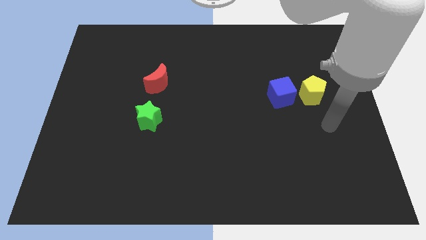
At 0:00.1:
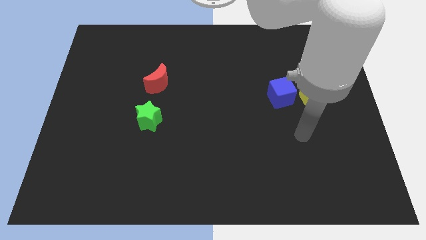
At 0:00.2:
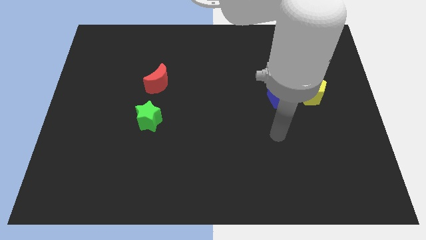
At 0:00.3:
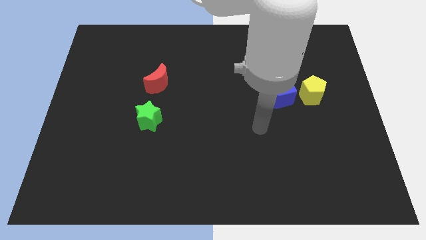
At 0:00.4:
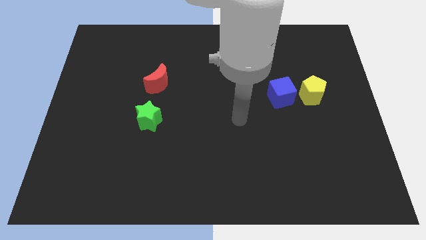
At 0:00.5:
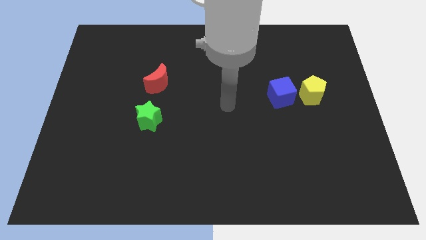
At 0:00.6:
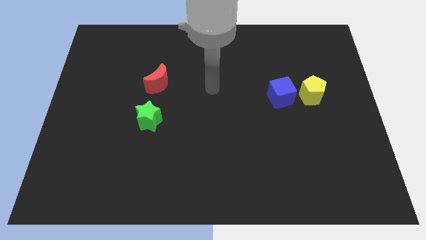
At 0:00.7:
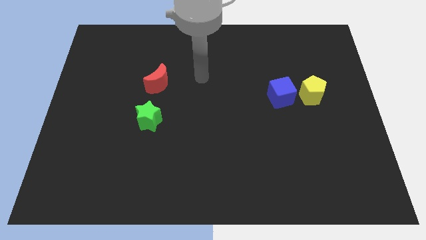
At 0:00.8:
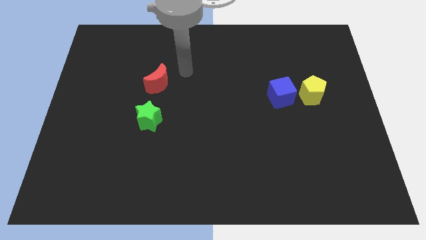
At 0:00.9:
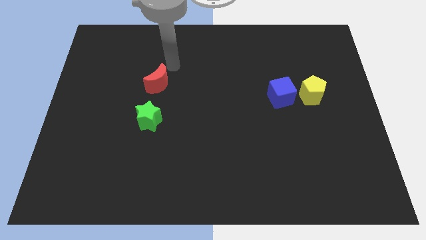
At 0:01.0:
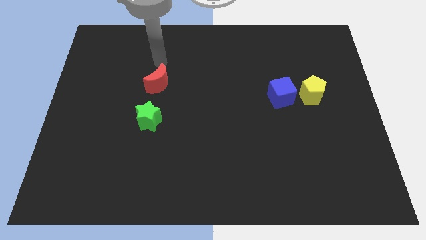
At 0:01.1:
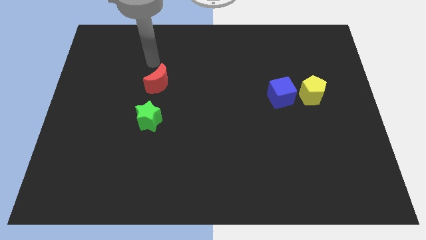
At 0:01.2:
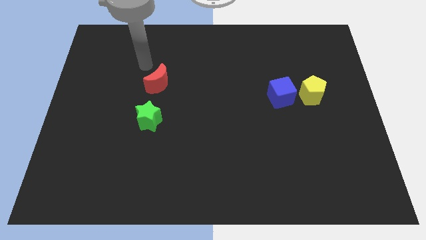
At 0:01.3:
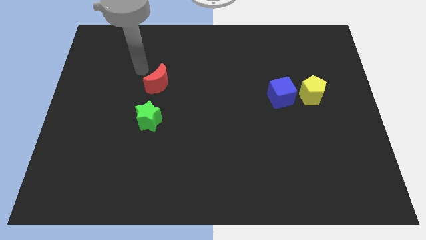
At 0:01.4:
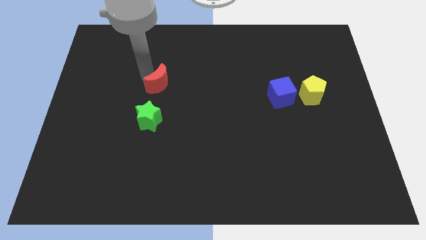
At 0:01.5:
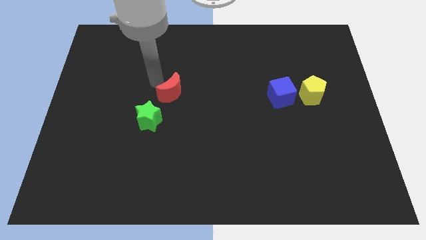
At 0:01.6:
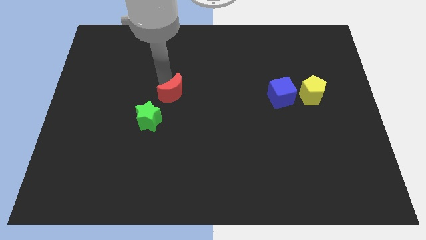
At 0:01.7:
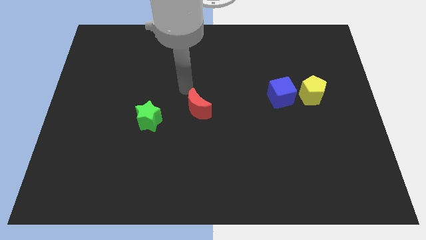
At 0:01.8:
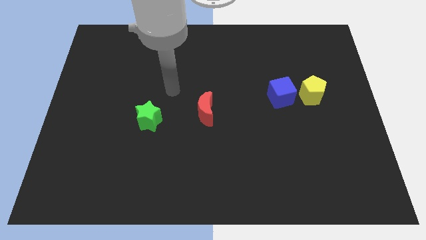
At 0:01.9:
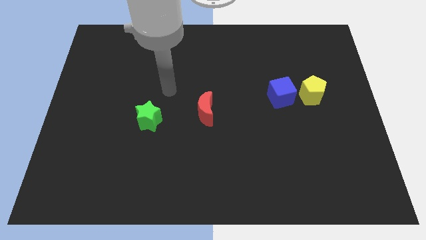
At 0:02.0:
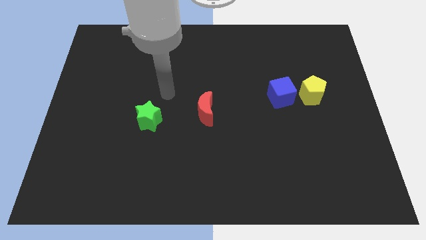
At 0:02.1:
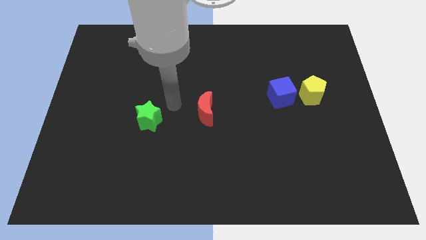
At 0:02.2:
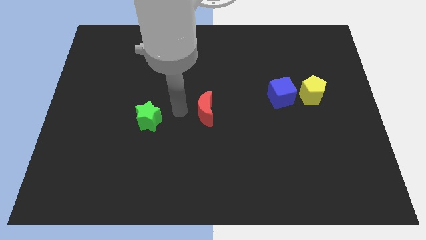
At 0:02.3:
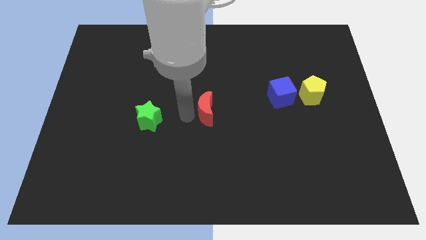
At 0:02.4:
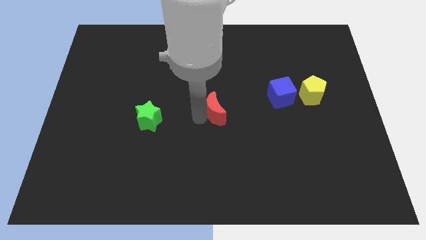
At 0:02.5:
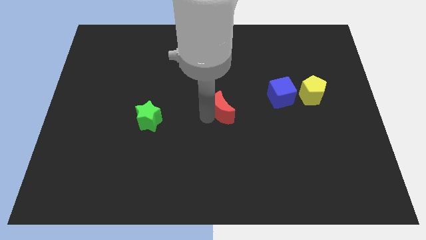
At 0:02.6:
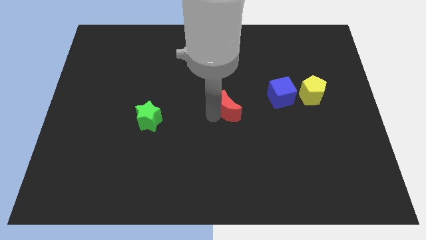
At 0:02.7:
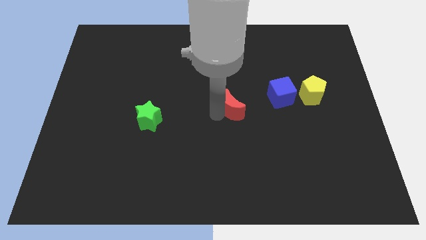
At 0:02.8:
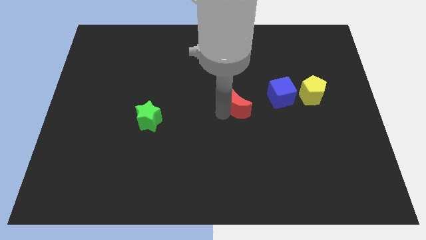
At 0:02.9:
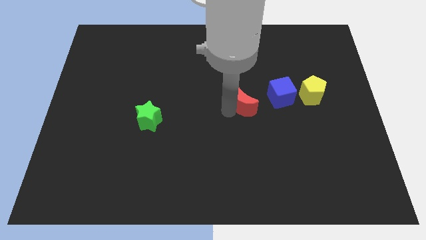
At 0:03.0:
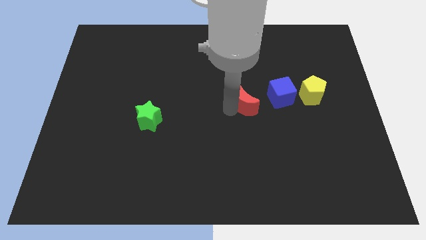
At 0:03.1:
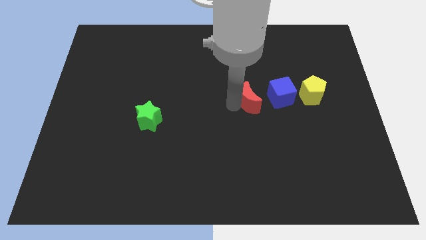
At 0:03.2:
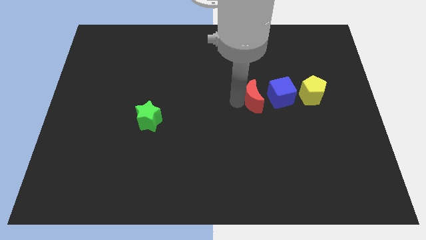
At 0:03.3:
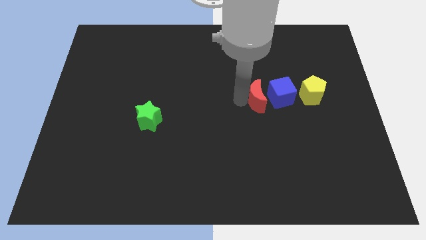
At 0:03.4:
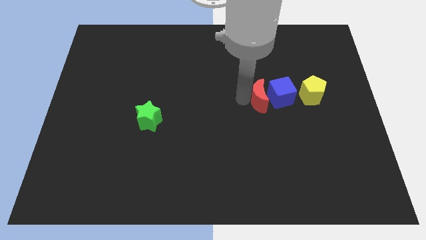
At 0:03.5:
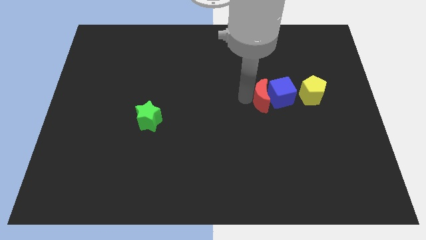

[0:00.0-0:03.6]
put the red block close to the blue cube

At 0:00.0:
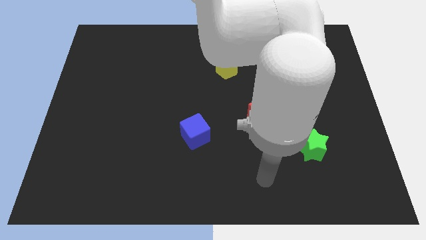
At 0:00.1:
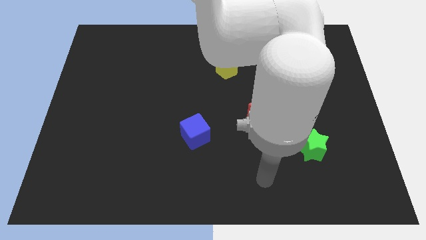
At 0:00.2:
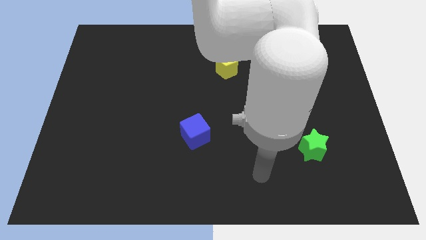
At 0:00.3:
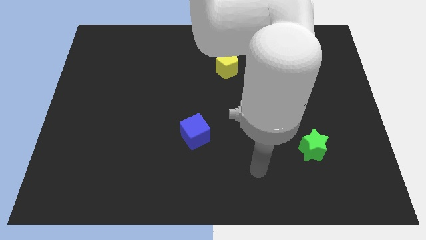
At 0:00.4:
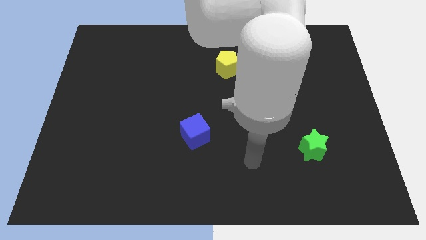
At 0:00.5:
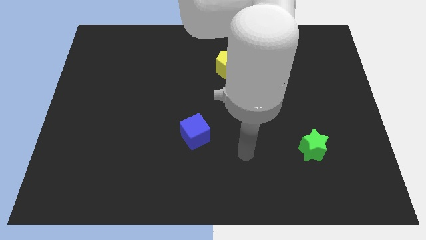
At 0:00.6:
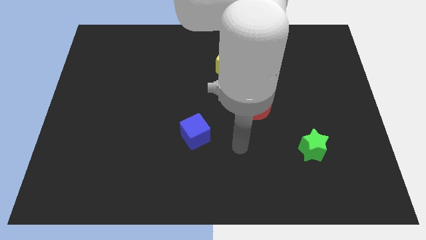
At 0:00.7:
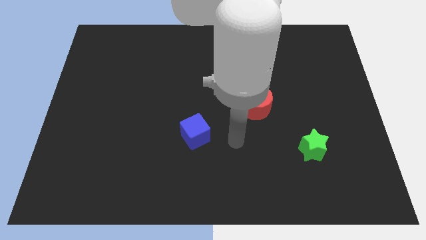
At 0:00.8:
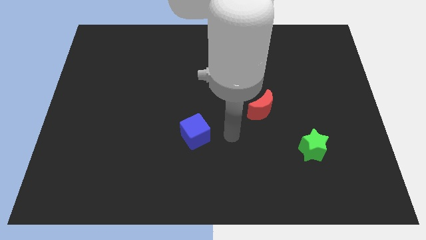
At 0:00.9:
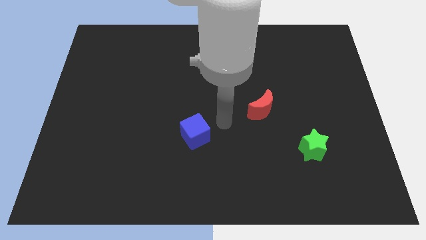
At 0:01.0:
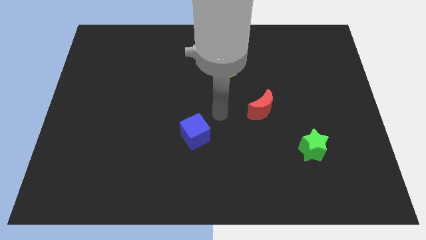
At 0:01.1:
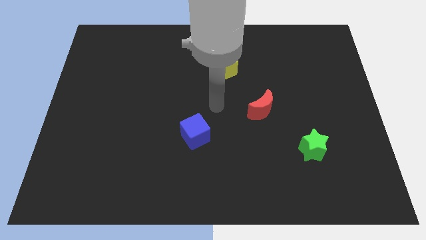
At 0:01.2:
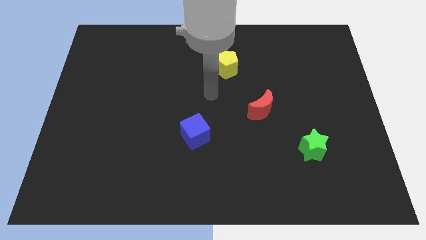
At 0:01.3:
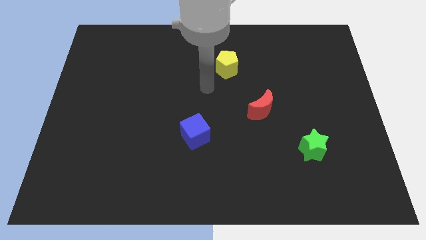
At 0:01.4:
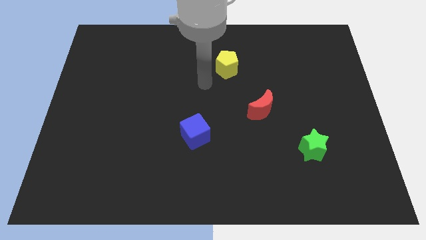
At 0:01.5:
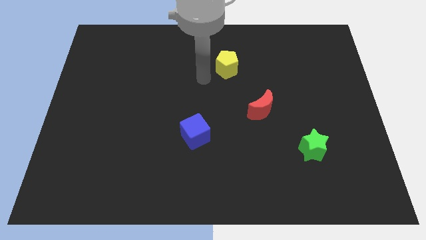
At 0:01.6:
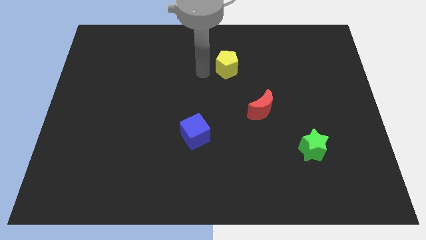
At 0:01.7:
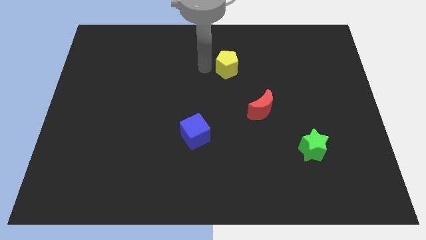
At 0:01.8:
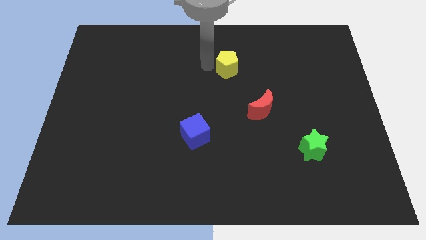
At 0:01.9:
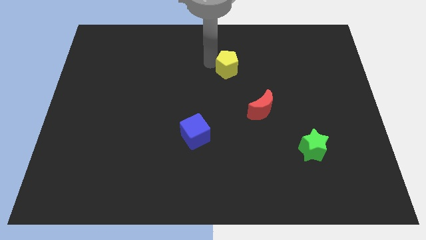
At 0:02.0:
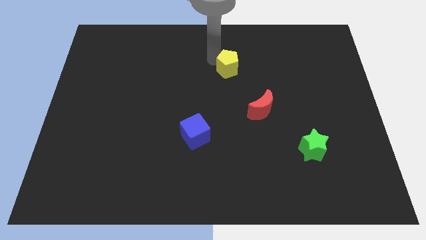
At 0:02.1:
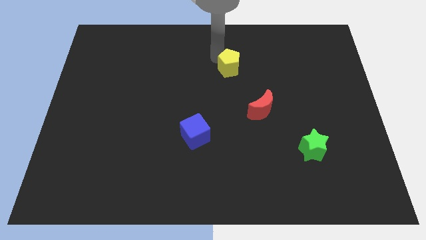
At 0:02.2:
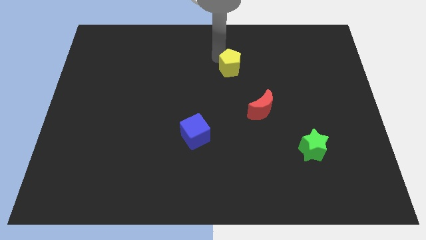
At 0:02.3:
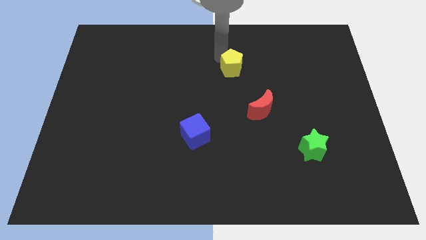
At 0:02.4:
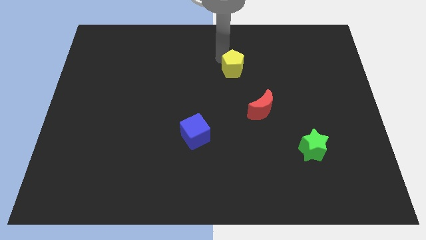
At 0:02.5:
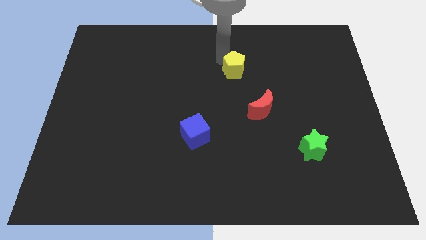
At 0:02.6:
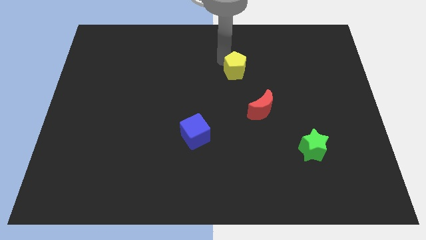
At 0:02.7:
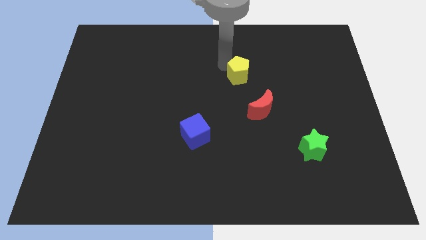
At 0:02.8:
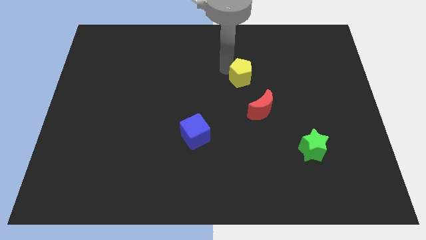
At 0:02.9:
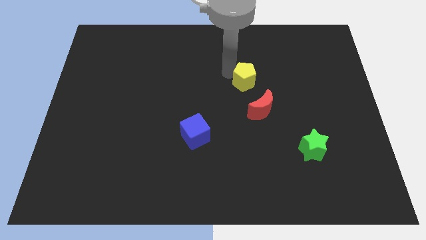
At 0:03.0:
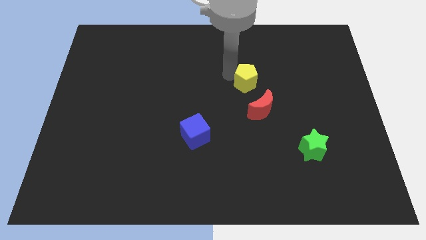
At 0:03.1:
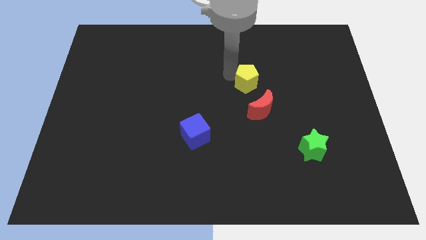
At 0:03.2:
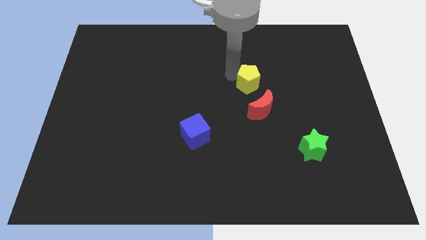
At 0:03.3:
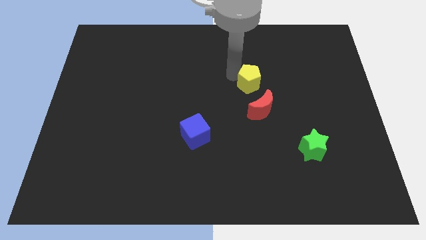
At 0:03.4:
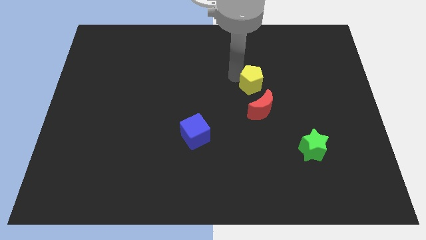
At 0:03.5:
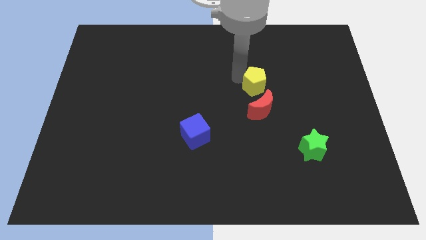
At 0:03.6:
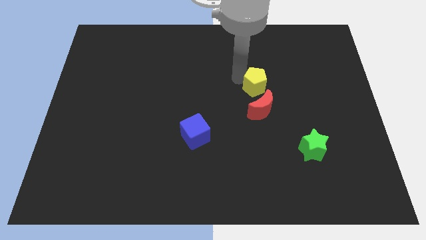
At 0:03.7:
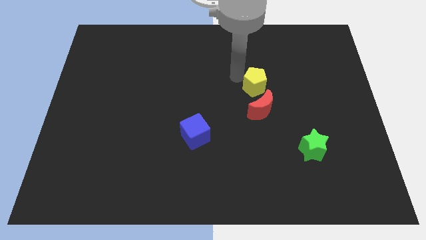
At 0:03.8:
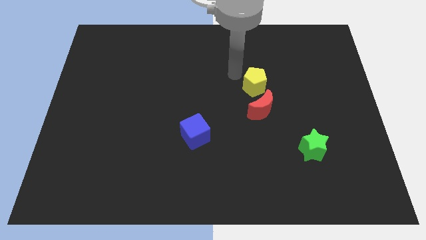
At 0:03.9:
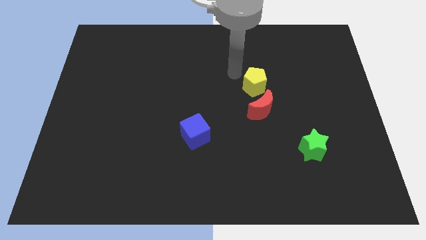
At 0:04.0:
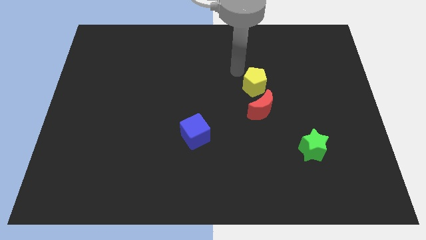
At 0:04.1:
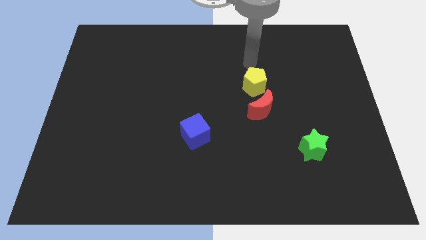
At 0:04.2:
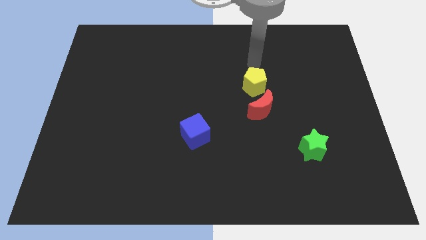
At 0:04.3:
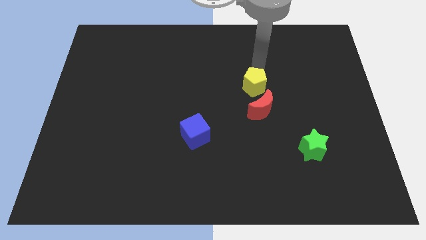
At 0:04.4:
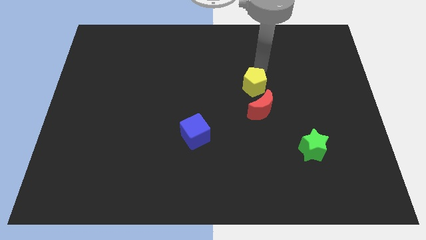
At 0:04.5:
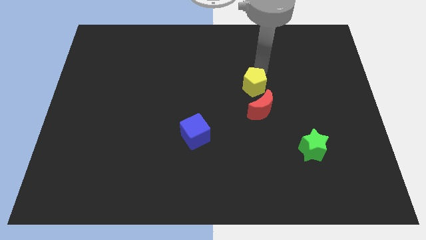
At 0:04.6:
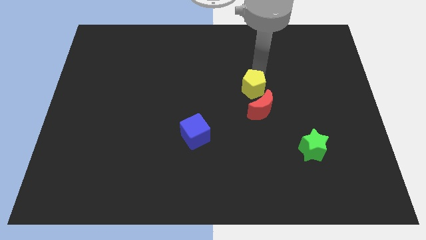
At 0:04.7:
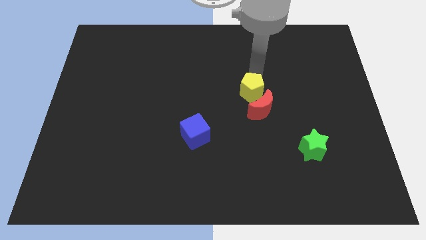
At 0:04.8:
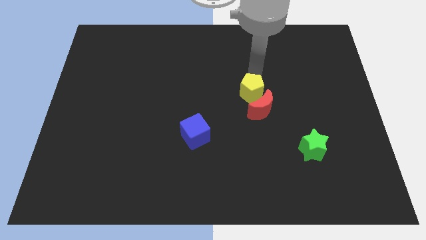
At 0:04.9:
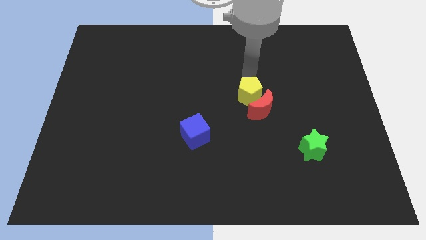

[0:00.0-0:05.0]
push the yellow block close to the moon
